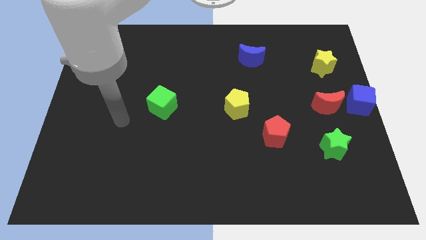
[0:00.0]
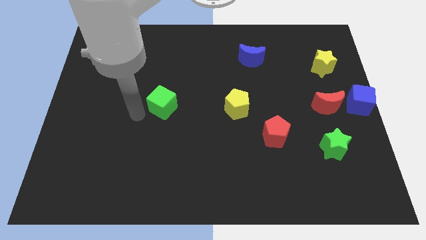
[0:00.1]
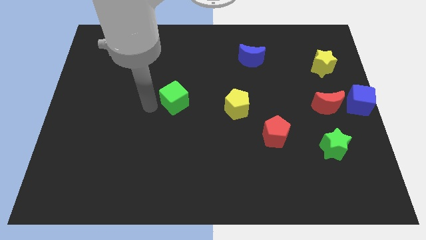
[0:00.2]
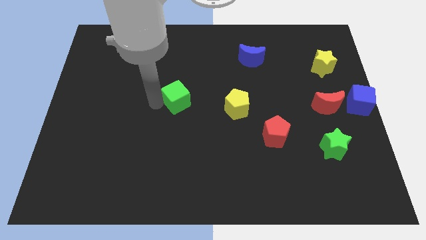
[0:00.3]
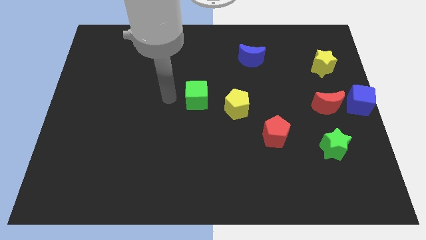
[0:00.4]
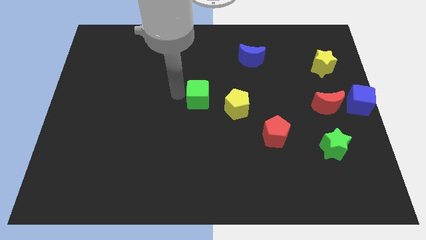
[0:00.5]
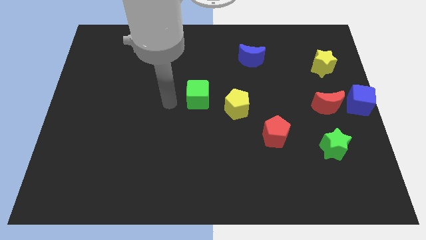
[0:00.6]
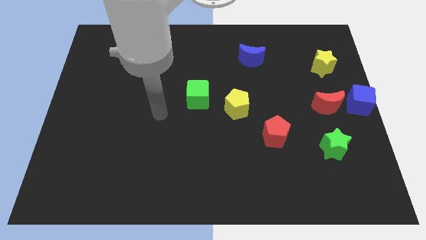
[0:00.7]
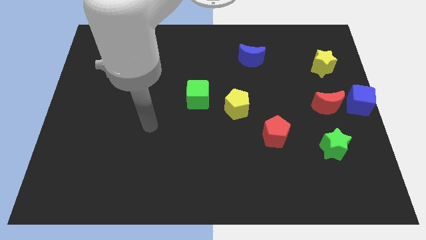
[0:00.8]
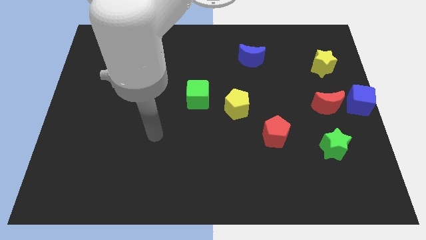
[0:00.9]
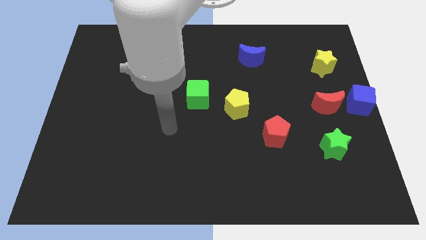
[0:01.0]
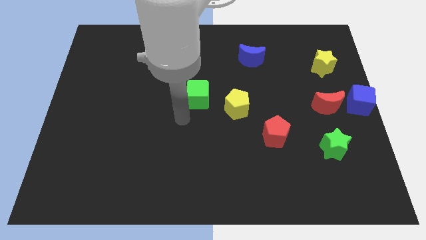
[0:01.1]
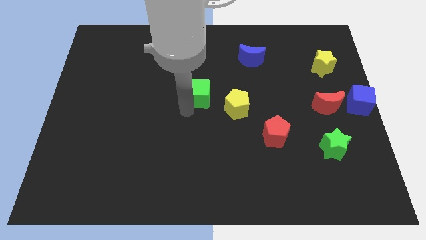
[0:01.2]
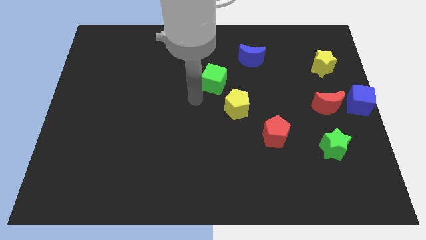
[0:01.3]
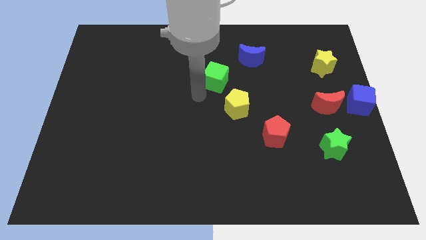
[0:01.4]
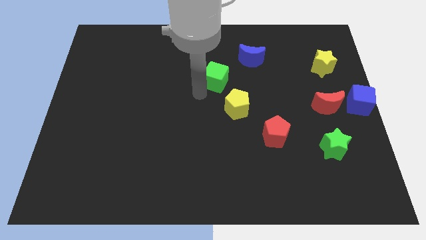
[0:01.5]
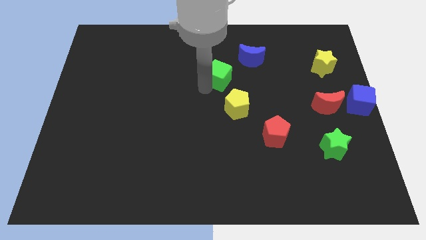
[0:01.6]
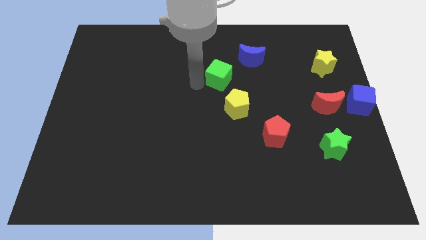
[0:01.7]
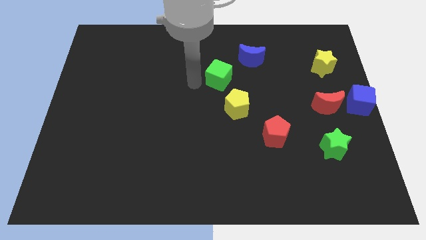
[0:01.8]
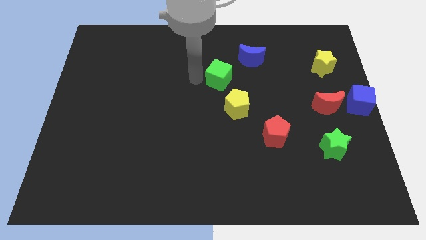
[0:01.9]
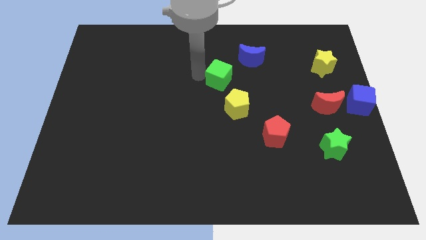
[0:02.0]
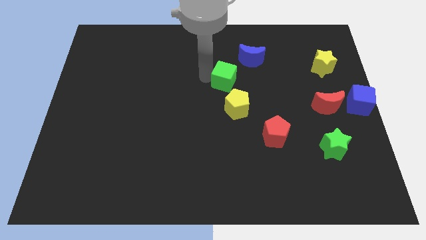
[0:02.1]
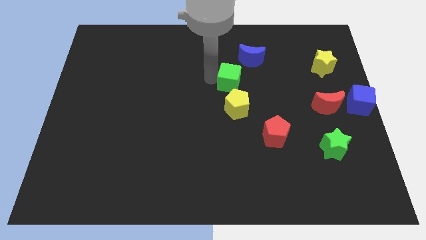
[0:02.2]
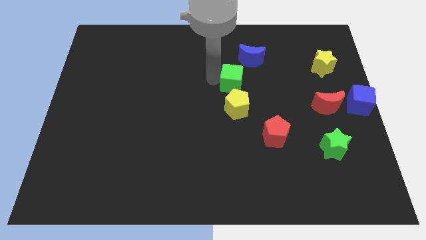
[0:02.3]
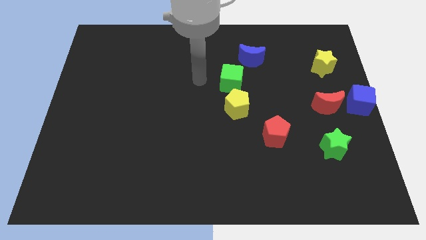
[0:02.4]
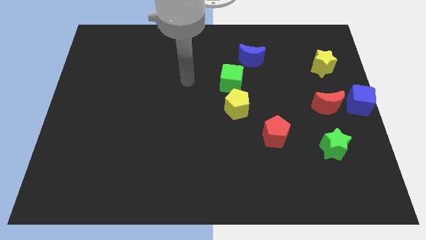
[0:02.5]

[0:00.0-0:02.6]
place the green cube on top of the yellow pentagon

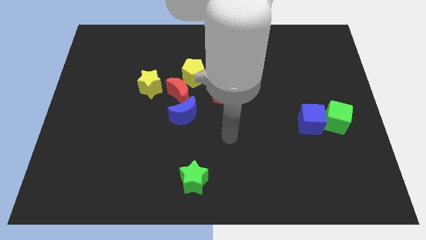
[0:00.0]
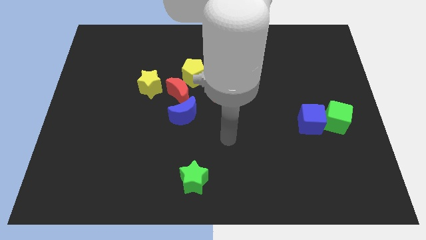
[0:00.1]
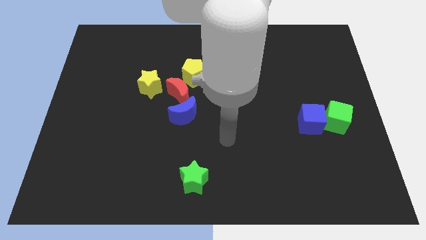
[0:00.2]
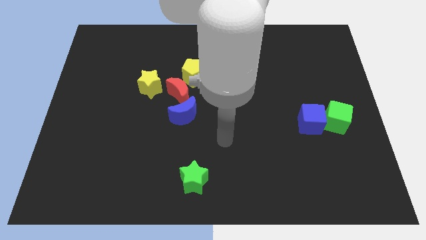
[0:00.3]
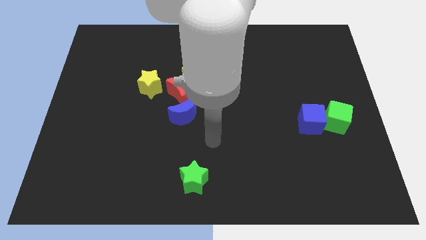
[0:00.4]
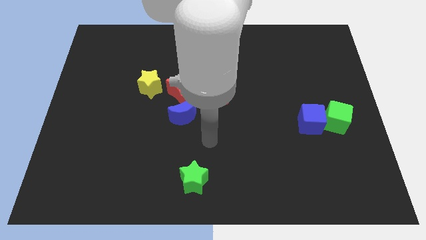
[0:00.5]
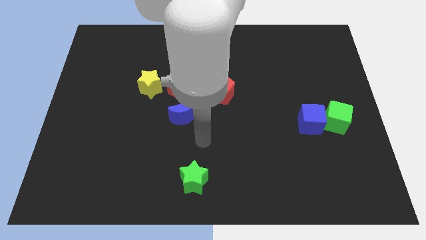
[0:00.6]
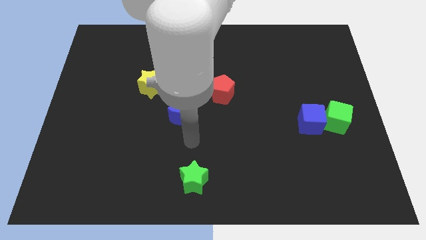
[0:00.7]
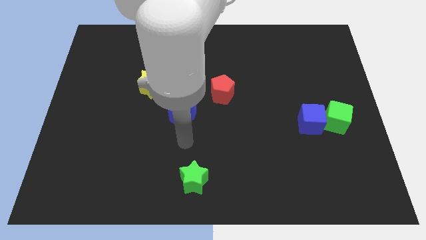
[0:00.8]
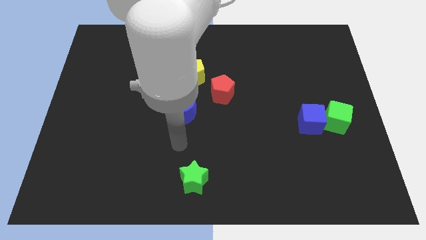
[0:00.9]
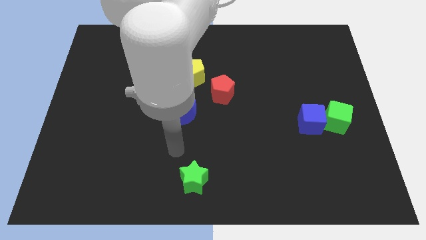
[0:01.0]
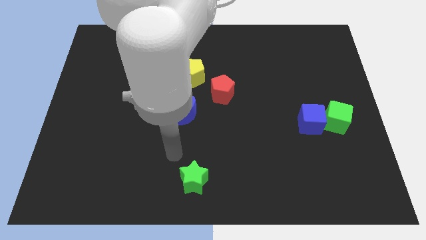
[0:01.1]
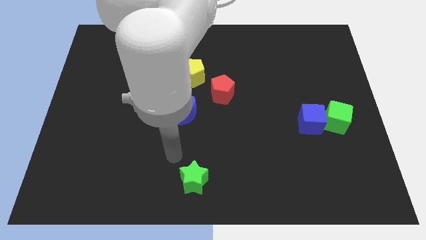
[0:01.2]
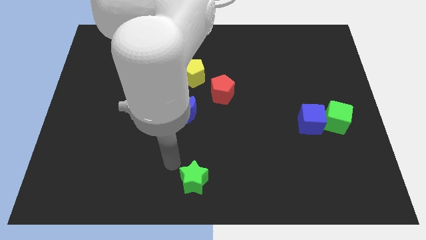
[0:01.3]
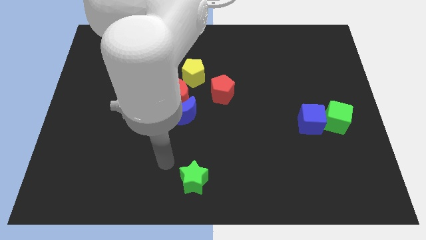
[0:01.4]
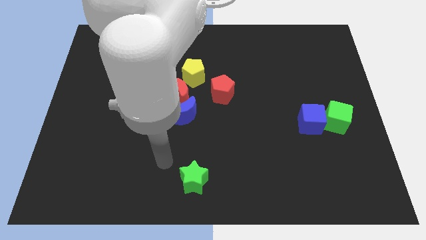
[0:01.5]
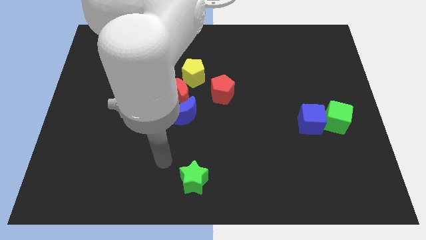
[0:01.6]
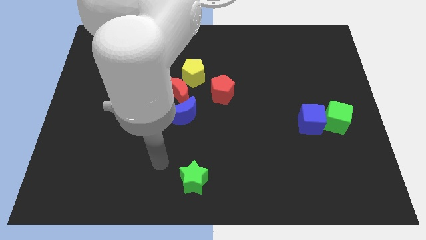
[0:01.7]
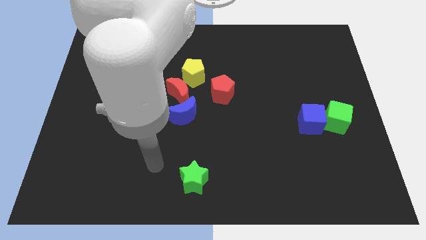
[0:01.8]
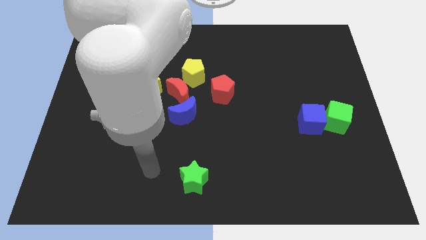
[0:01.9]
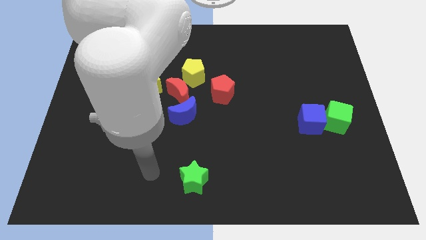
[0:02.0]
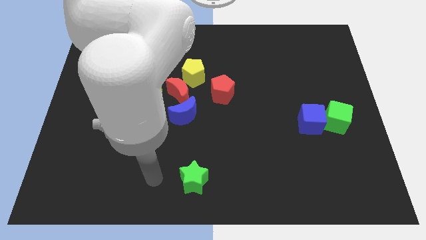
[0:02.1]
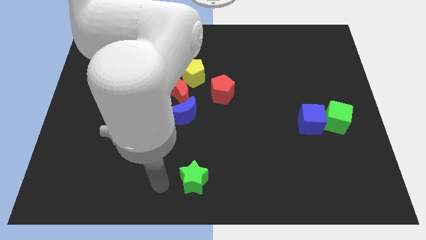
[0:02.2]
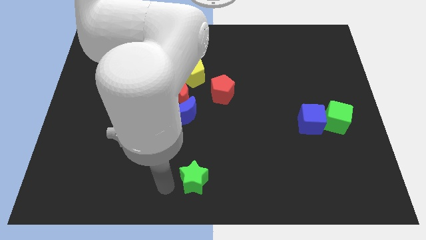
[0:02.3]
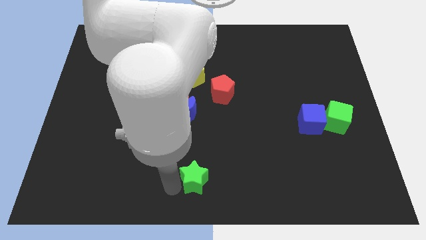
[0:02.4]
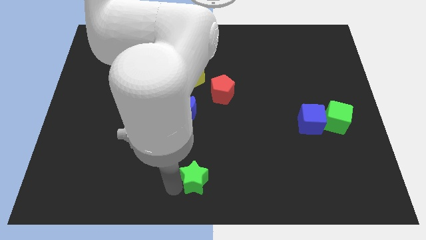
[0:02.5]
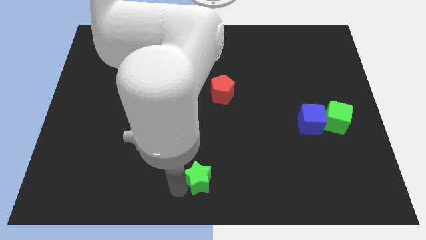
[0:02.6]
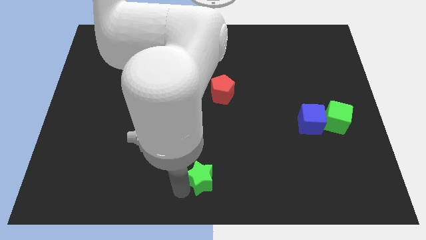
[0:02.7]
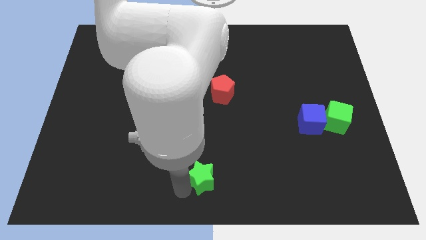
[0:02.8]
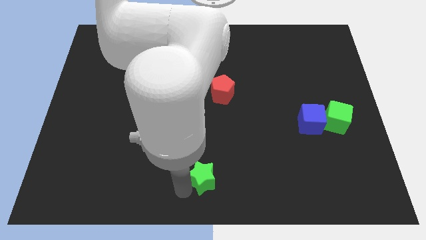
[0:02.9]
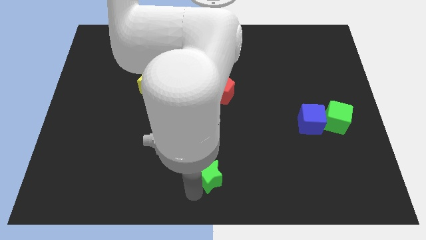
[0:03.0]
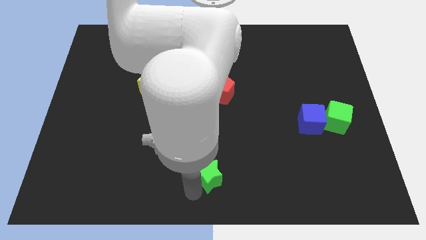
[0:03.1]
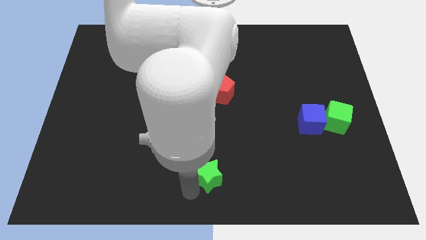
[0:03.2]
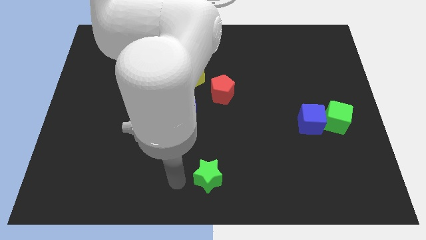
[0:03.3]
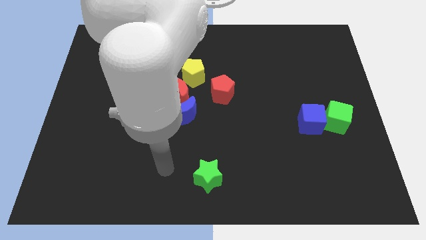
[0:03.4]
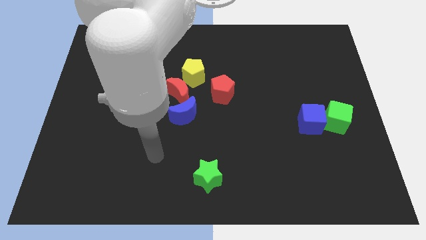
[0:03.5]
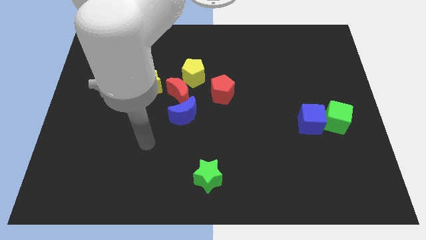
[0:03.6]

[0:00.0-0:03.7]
move the green star slightly to the right bottom of the board

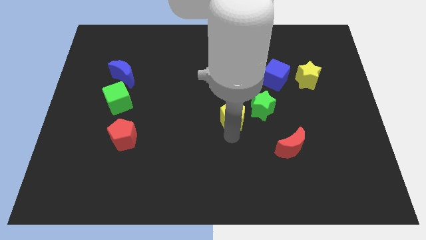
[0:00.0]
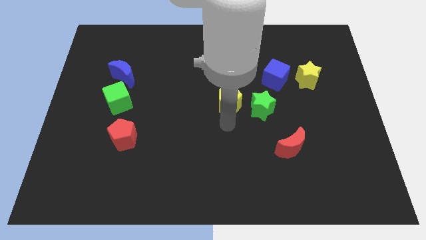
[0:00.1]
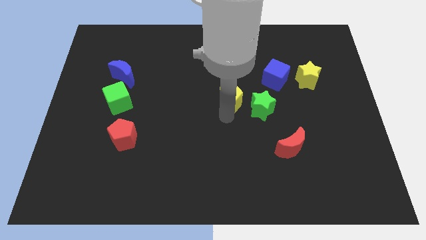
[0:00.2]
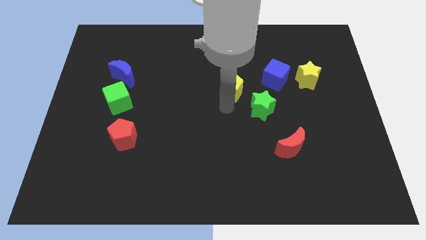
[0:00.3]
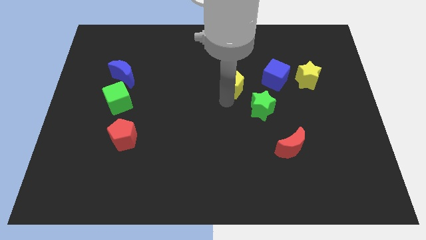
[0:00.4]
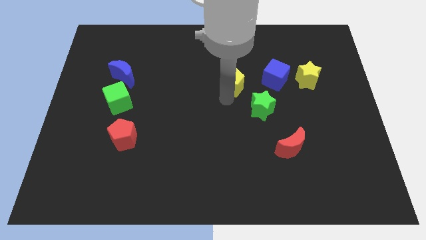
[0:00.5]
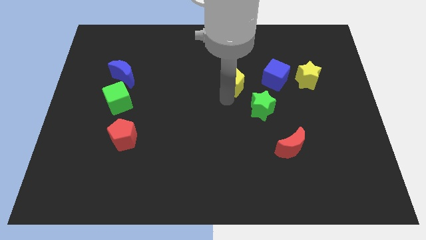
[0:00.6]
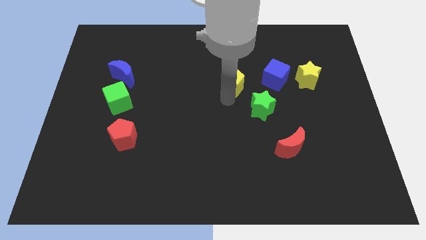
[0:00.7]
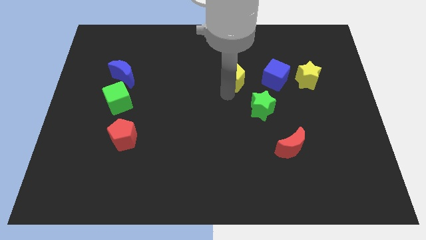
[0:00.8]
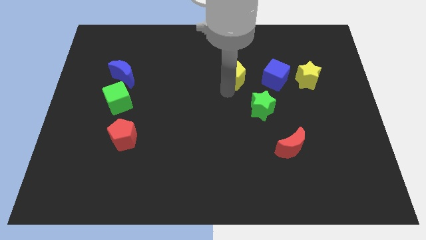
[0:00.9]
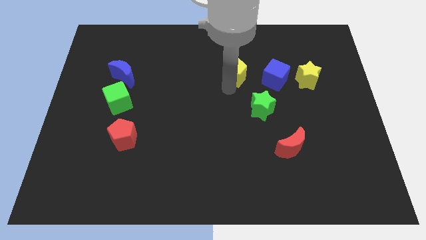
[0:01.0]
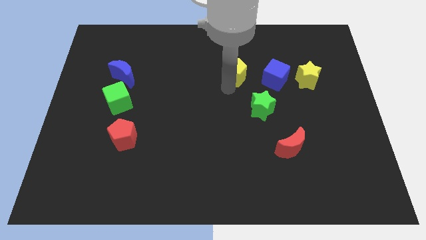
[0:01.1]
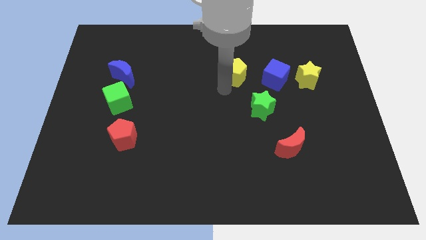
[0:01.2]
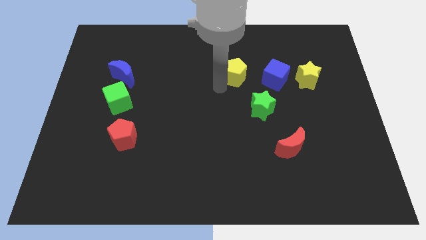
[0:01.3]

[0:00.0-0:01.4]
place yellow pentagon left to blue cube

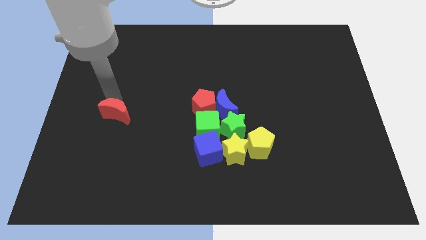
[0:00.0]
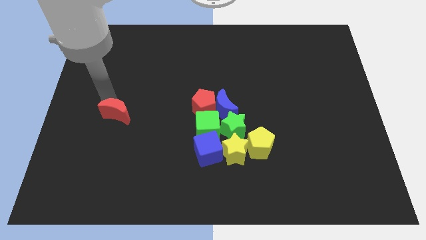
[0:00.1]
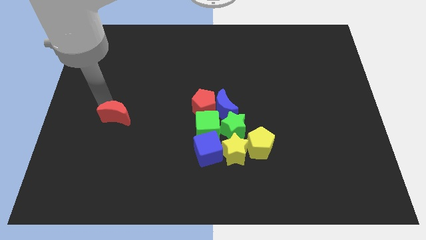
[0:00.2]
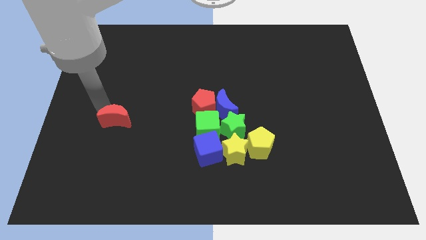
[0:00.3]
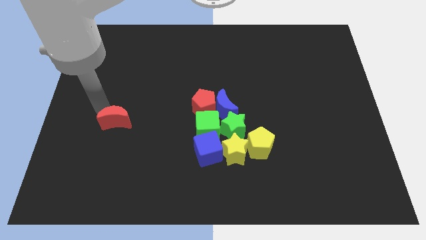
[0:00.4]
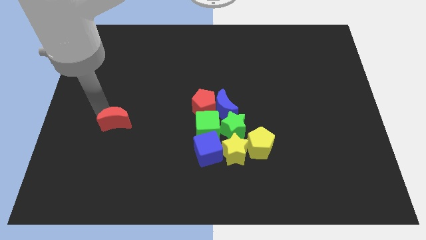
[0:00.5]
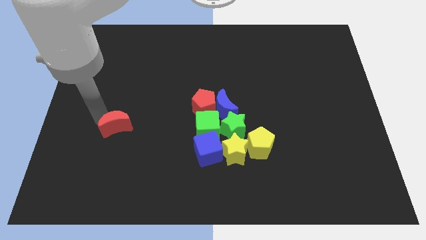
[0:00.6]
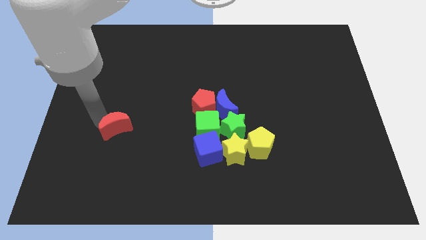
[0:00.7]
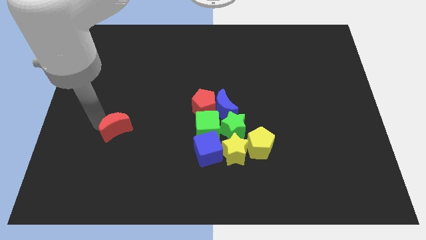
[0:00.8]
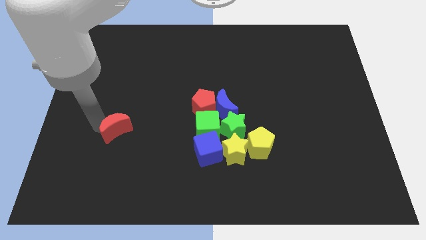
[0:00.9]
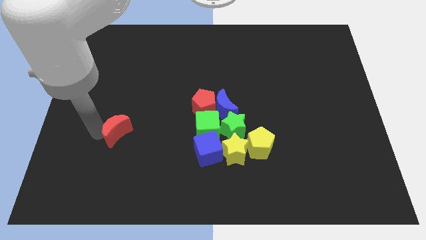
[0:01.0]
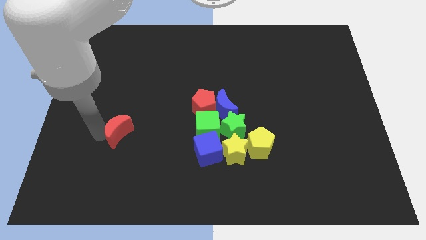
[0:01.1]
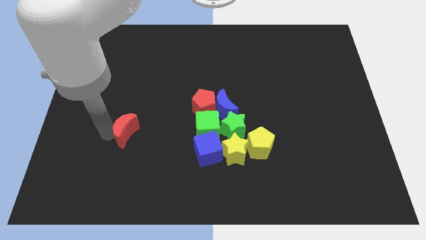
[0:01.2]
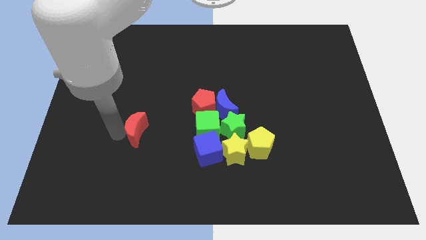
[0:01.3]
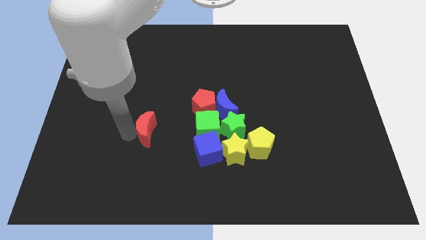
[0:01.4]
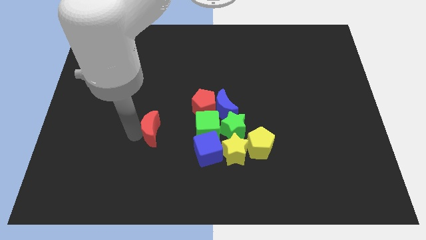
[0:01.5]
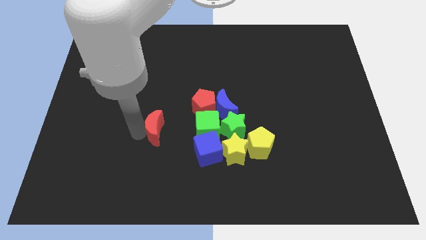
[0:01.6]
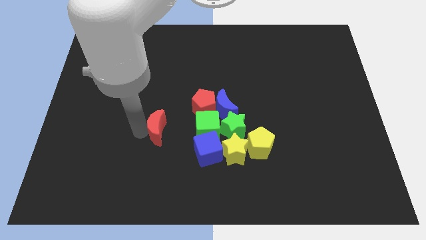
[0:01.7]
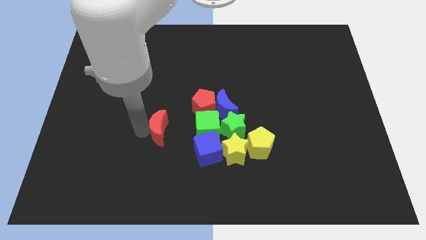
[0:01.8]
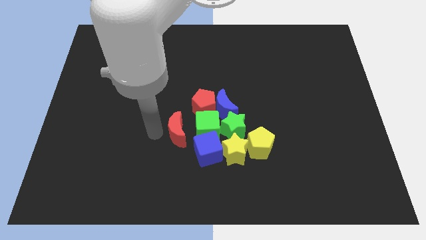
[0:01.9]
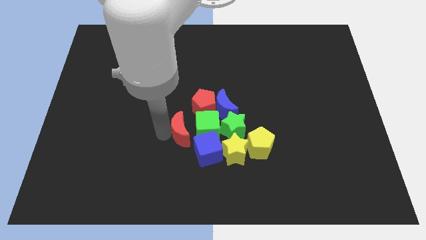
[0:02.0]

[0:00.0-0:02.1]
move the red crescent towards green cube
